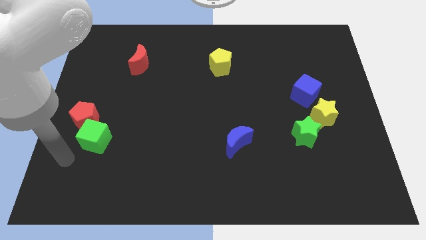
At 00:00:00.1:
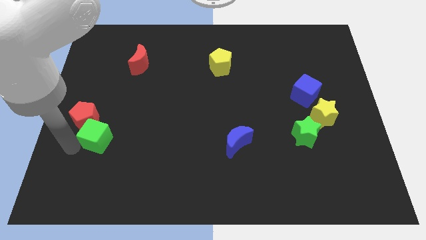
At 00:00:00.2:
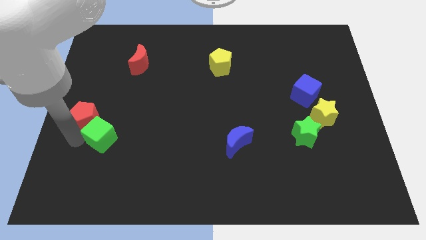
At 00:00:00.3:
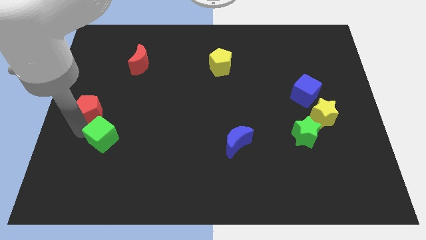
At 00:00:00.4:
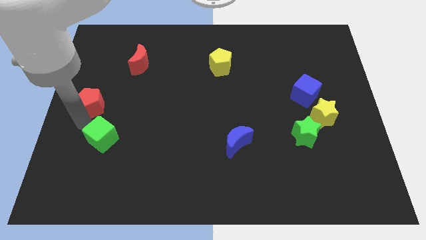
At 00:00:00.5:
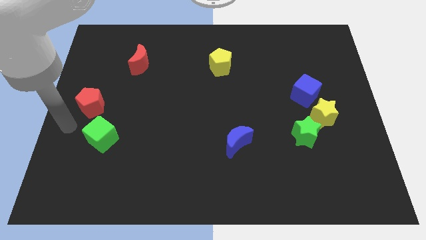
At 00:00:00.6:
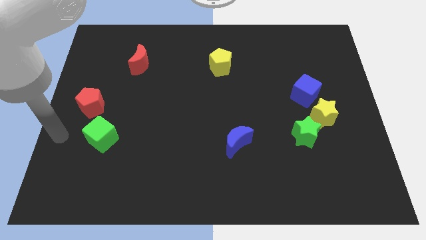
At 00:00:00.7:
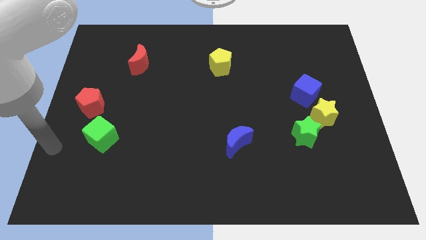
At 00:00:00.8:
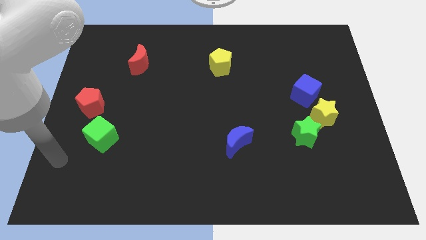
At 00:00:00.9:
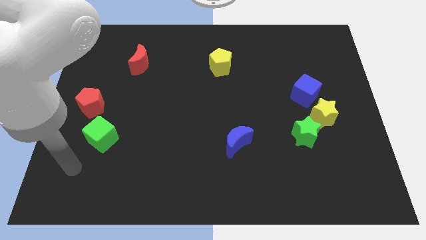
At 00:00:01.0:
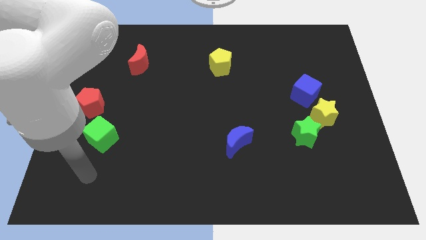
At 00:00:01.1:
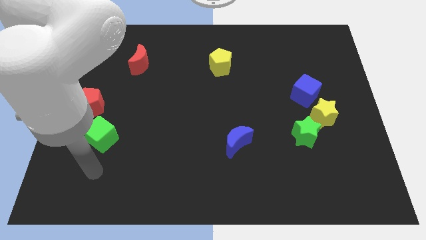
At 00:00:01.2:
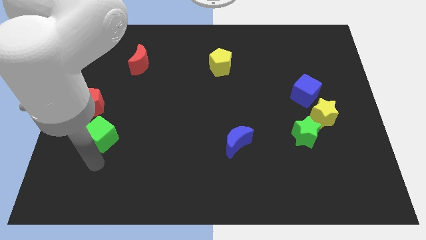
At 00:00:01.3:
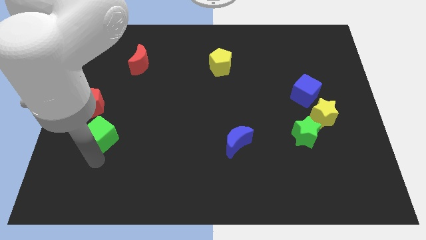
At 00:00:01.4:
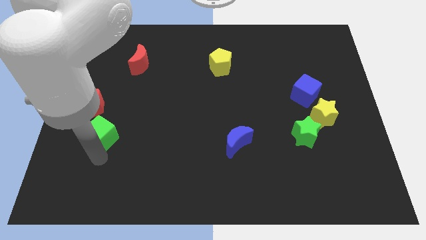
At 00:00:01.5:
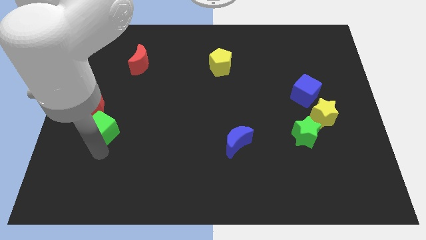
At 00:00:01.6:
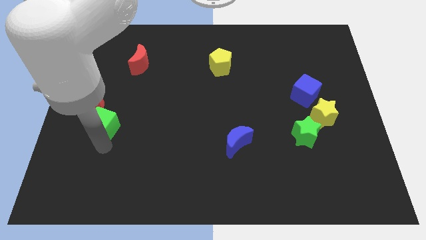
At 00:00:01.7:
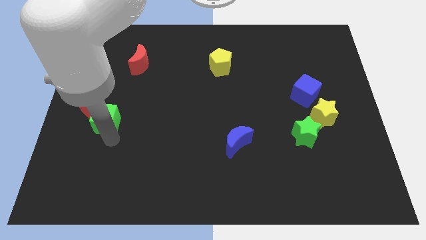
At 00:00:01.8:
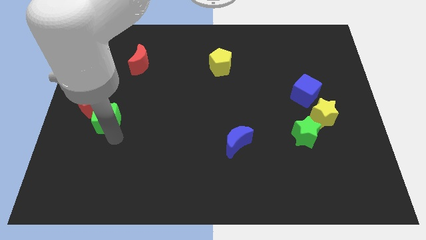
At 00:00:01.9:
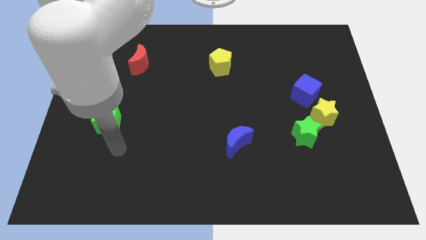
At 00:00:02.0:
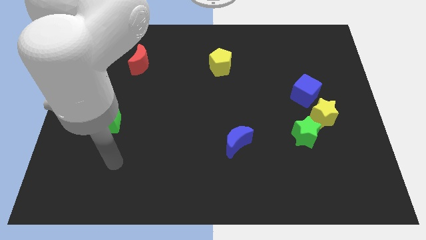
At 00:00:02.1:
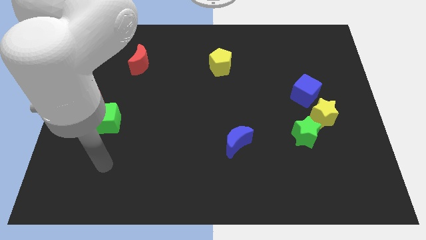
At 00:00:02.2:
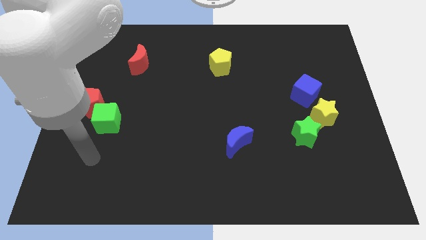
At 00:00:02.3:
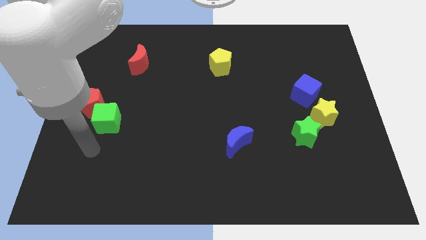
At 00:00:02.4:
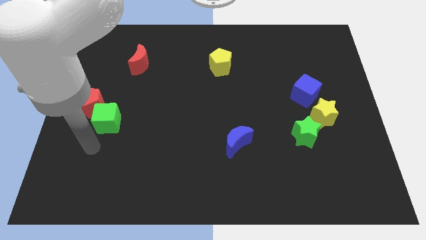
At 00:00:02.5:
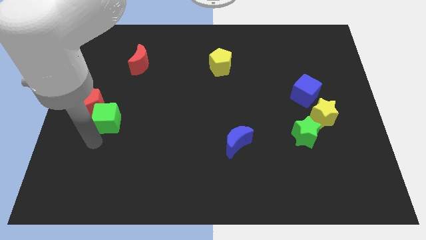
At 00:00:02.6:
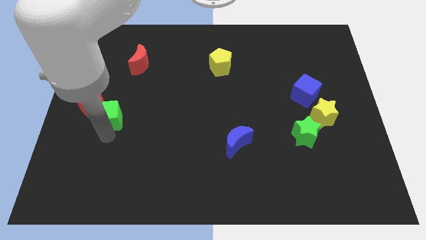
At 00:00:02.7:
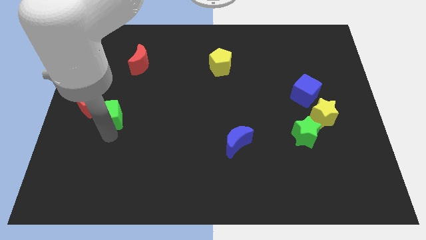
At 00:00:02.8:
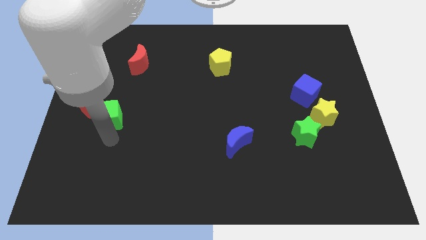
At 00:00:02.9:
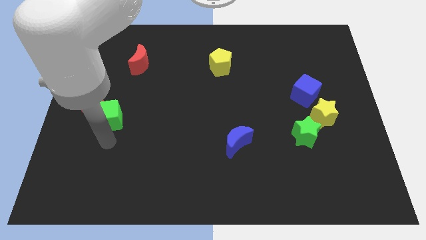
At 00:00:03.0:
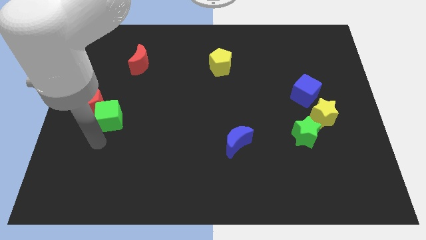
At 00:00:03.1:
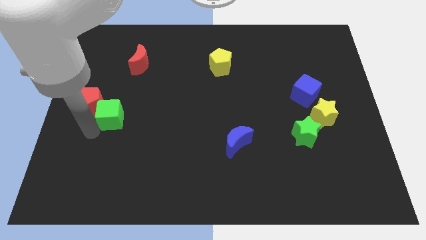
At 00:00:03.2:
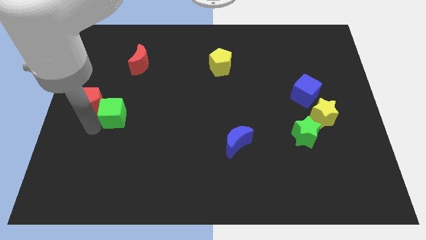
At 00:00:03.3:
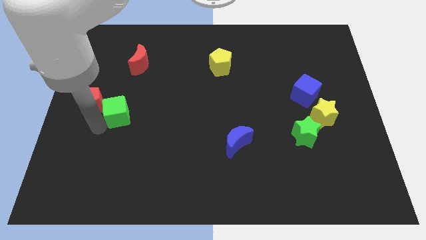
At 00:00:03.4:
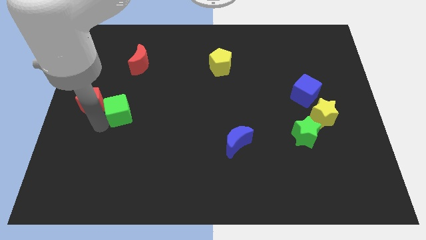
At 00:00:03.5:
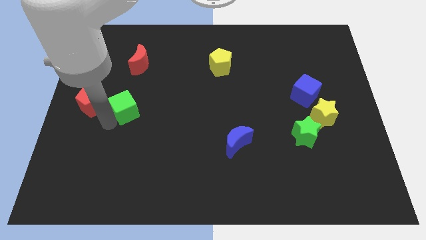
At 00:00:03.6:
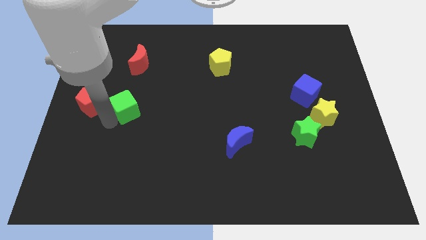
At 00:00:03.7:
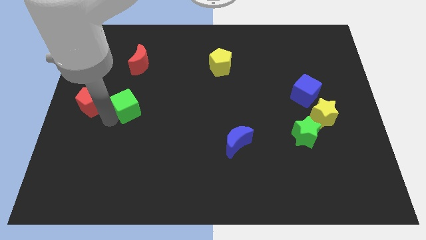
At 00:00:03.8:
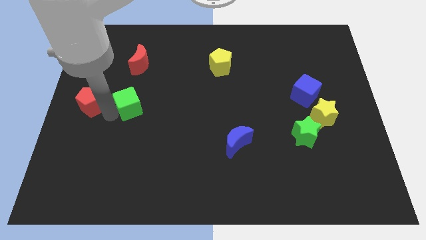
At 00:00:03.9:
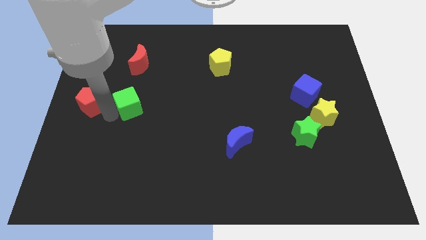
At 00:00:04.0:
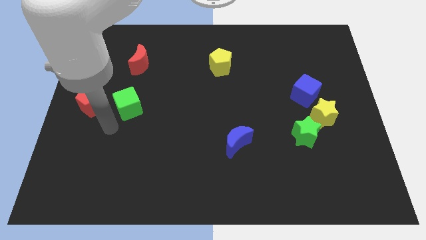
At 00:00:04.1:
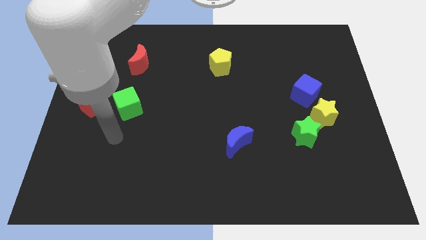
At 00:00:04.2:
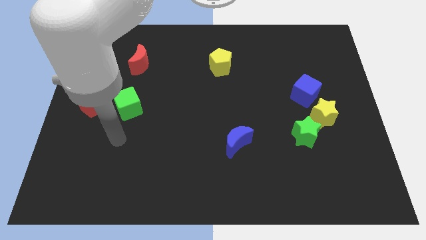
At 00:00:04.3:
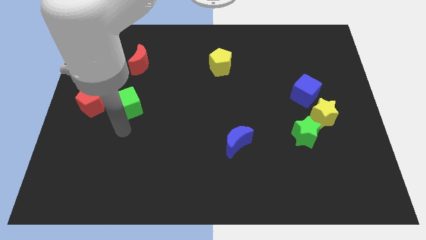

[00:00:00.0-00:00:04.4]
move the green cube to the right of the red pentagon

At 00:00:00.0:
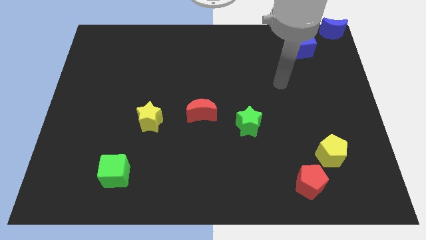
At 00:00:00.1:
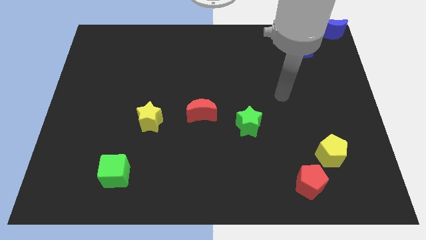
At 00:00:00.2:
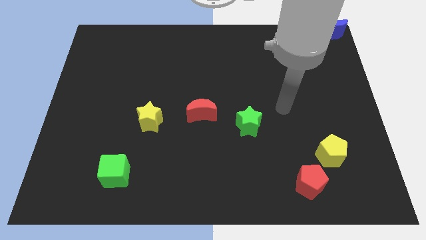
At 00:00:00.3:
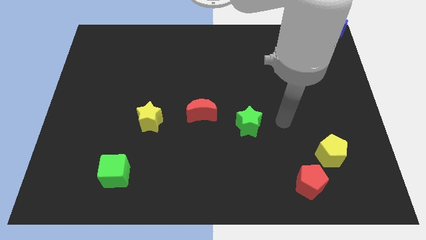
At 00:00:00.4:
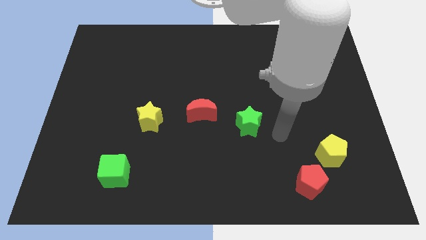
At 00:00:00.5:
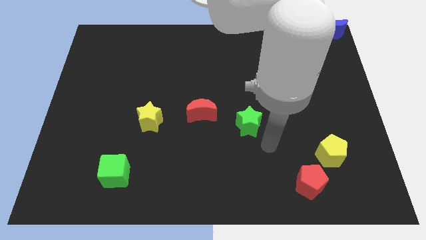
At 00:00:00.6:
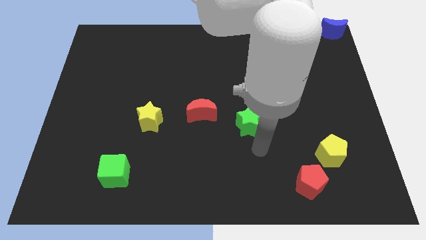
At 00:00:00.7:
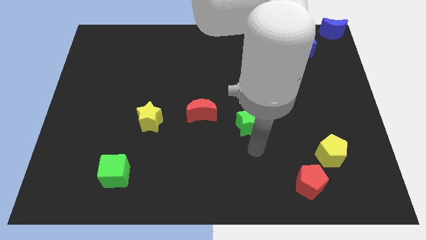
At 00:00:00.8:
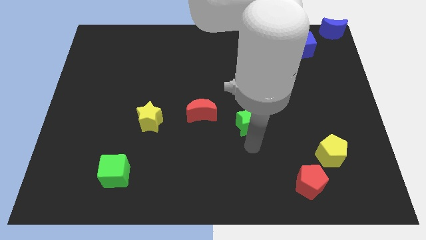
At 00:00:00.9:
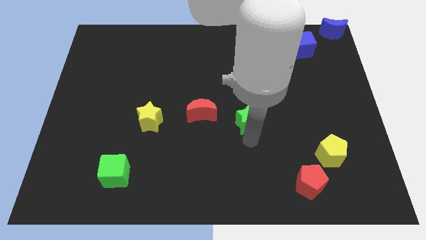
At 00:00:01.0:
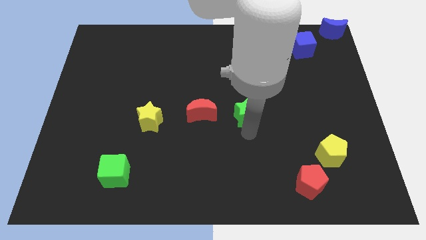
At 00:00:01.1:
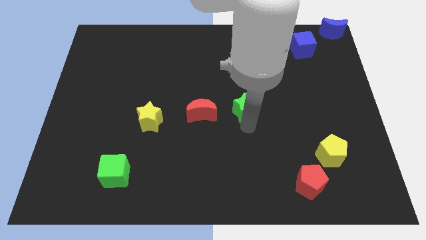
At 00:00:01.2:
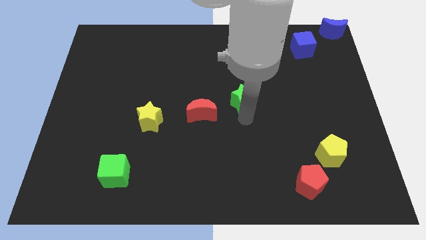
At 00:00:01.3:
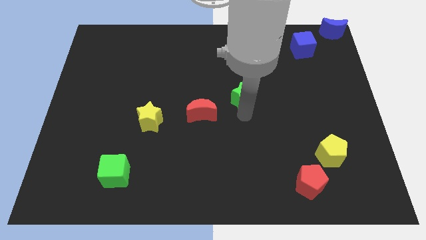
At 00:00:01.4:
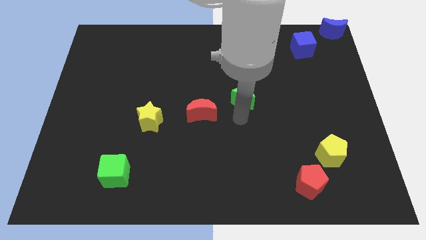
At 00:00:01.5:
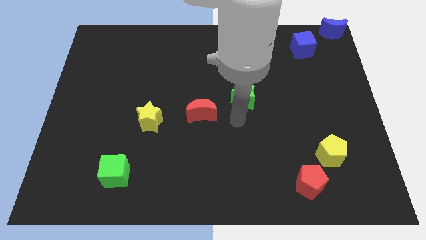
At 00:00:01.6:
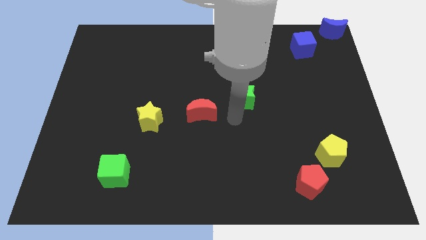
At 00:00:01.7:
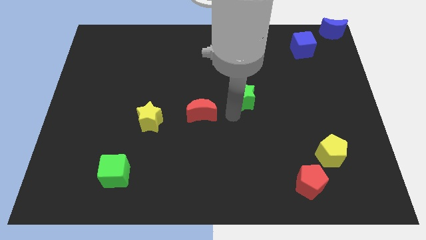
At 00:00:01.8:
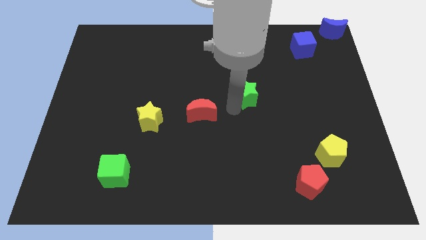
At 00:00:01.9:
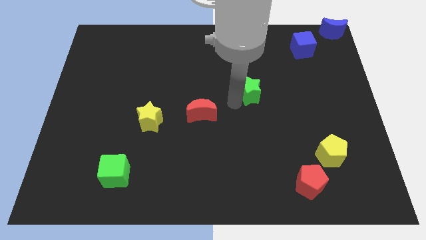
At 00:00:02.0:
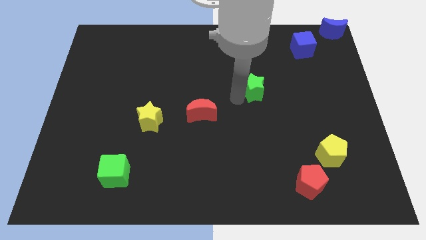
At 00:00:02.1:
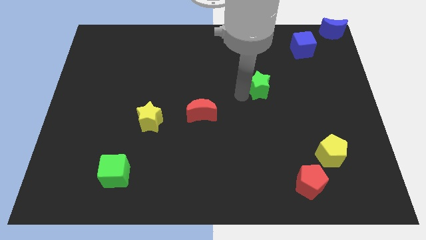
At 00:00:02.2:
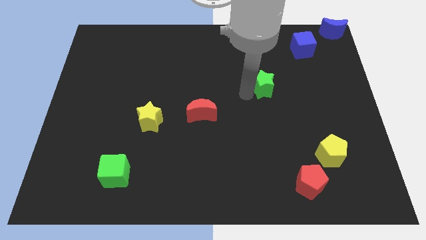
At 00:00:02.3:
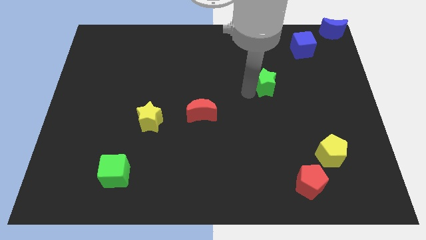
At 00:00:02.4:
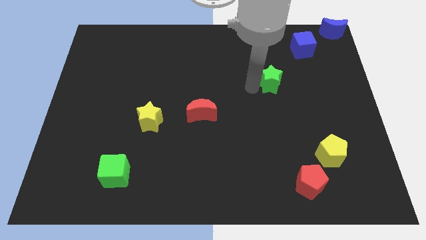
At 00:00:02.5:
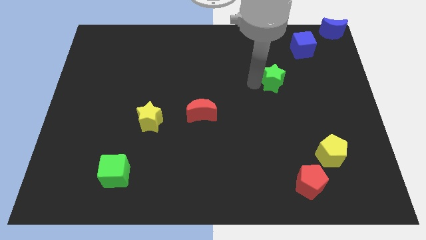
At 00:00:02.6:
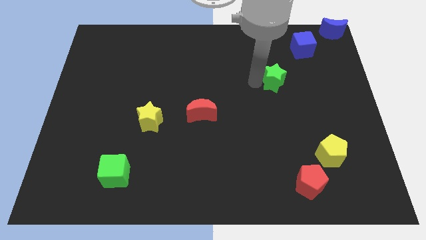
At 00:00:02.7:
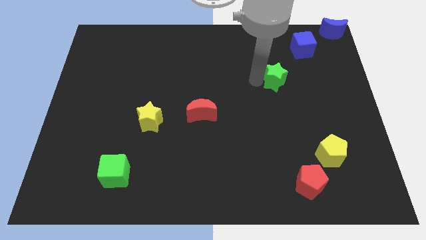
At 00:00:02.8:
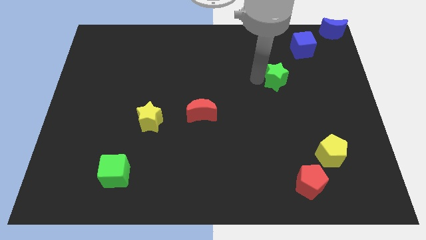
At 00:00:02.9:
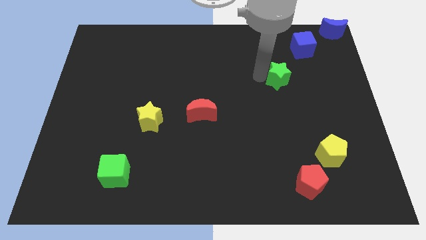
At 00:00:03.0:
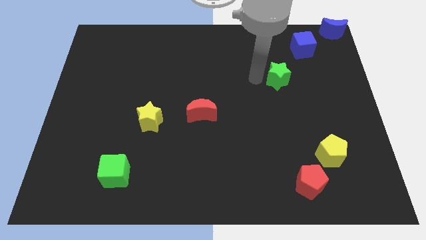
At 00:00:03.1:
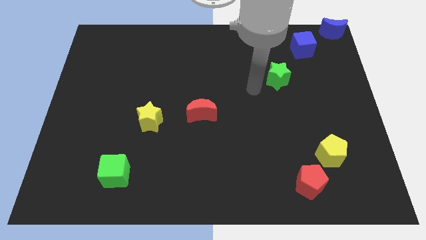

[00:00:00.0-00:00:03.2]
move the green star slightly towards the blue cube

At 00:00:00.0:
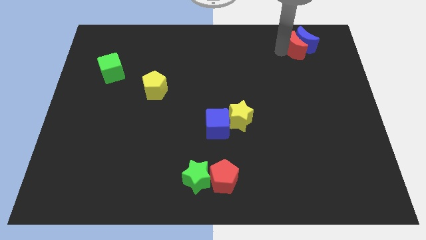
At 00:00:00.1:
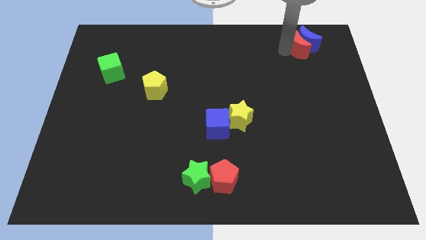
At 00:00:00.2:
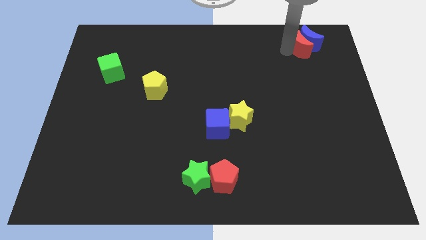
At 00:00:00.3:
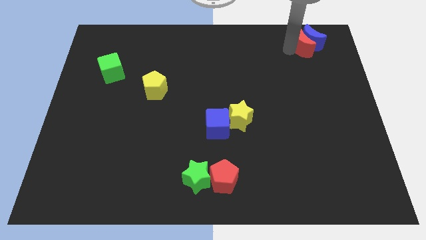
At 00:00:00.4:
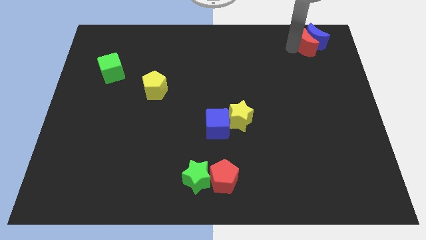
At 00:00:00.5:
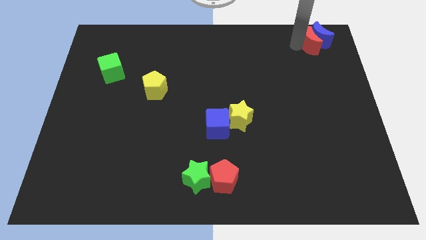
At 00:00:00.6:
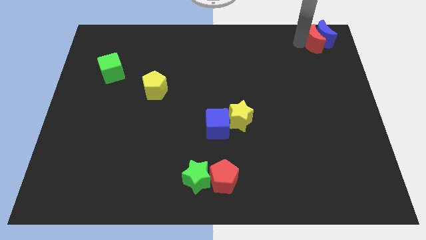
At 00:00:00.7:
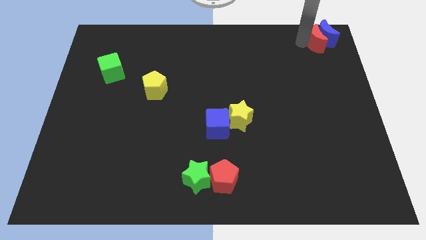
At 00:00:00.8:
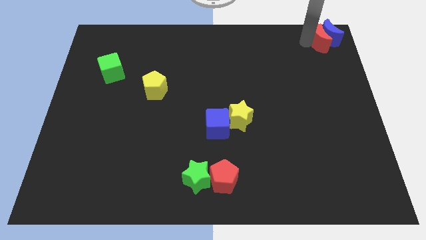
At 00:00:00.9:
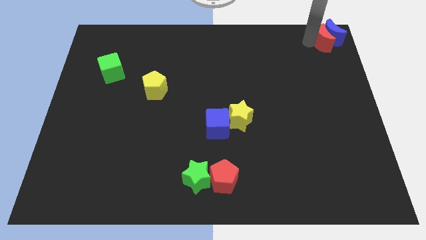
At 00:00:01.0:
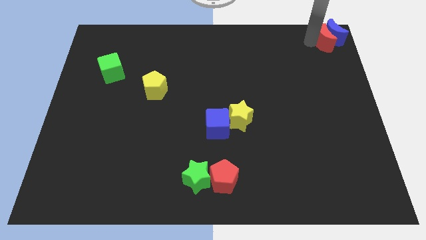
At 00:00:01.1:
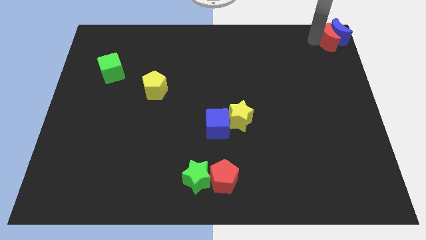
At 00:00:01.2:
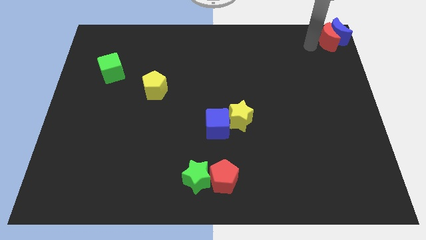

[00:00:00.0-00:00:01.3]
push the group of crescents to the top right corner of the board
